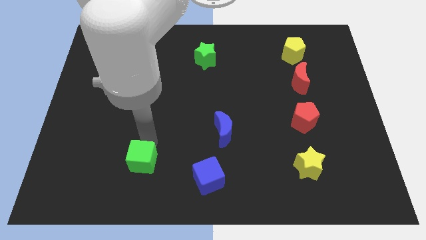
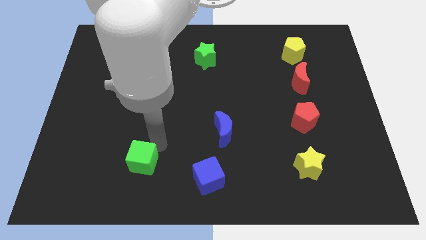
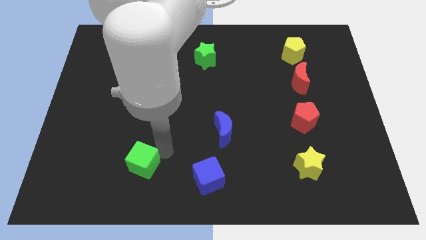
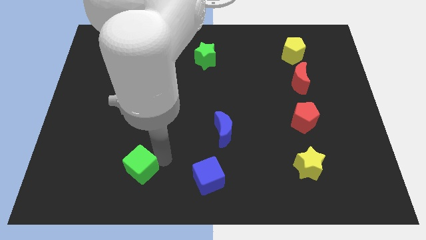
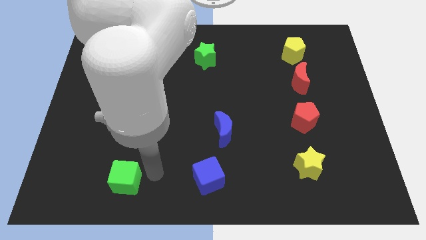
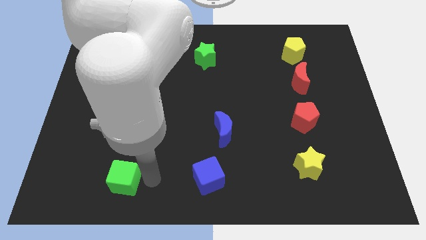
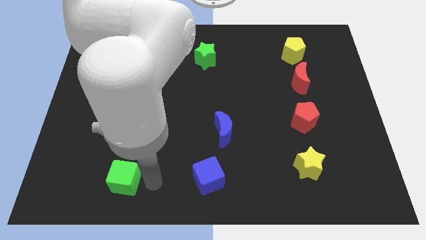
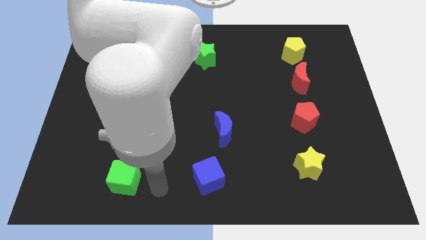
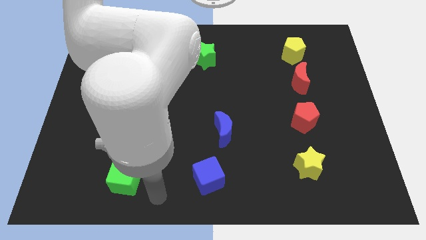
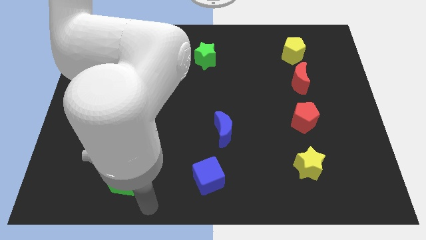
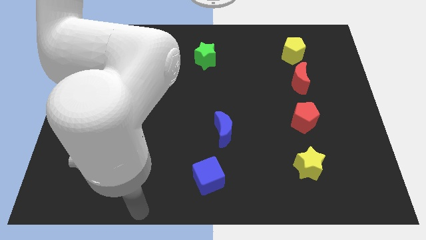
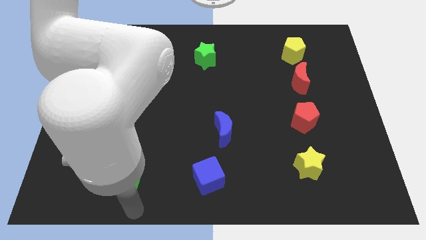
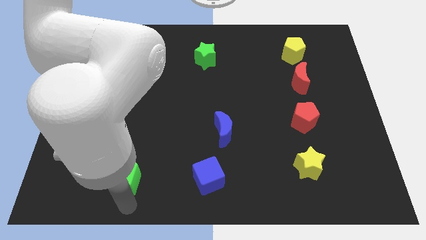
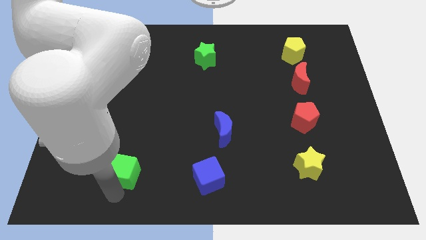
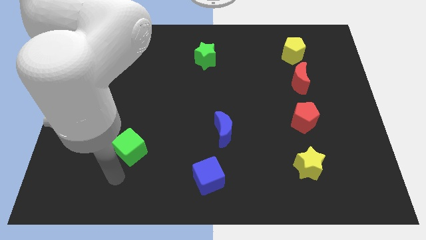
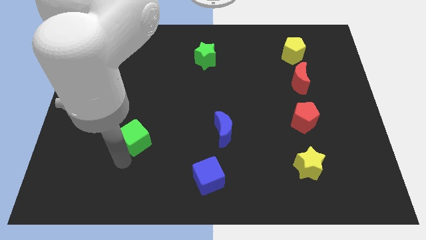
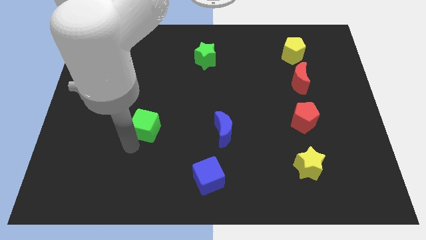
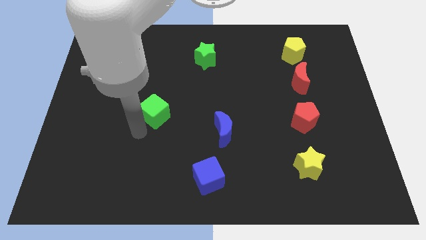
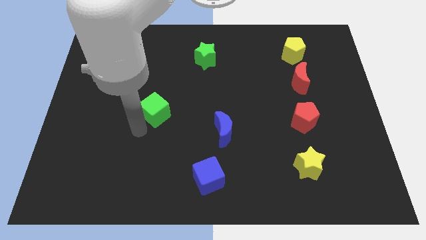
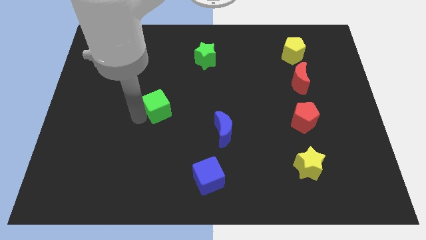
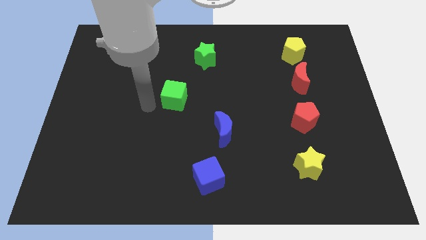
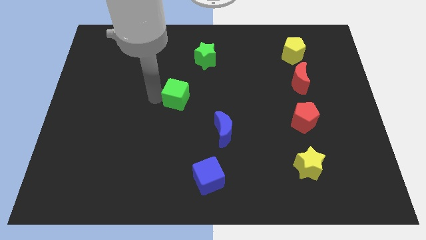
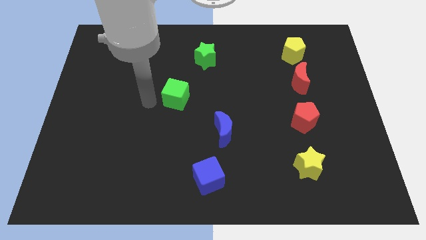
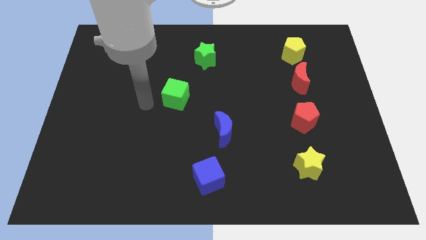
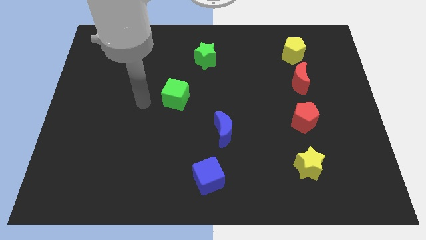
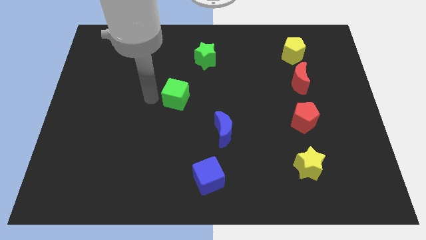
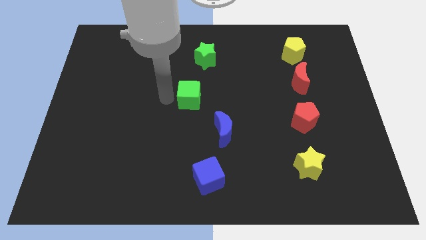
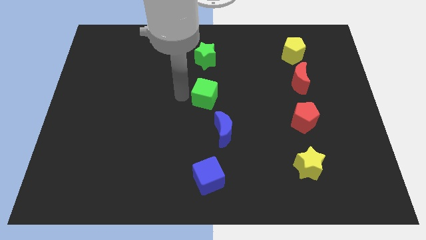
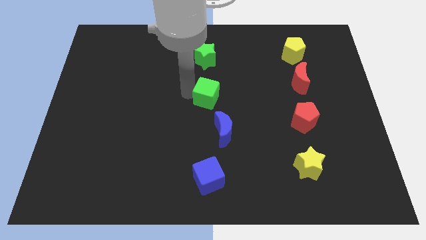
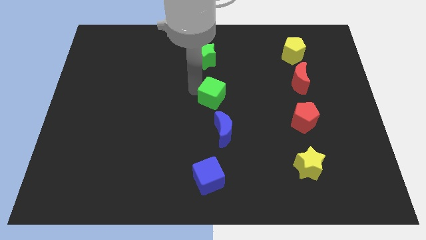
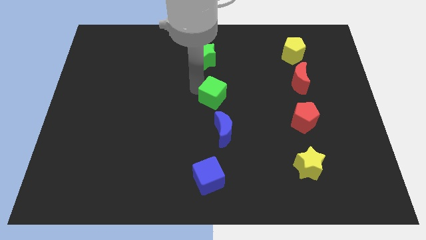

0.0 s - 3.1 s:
move the green cube towards the top of blue crescent

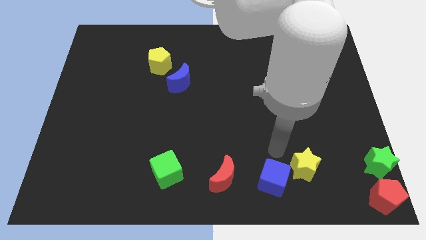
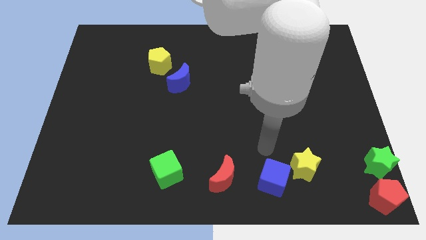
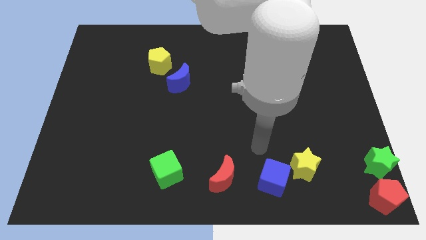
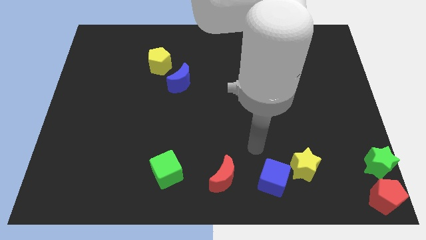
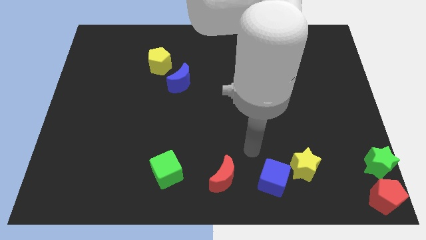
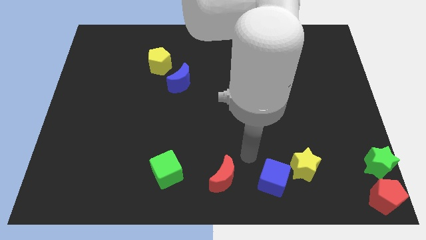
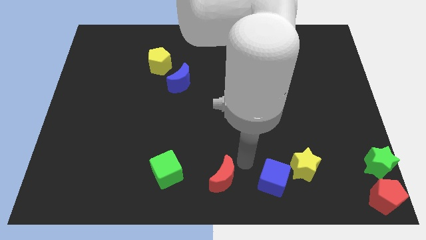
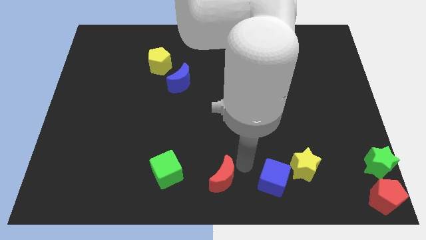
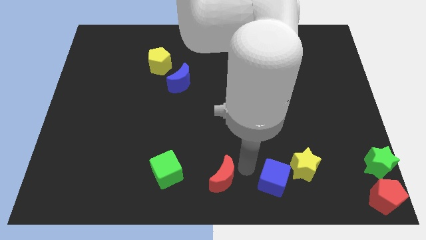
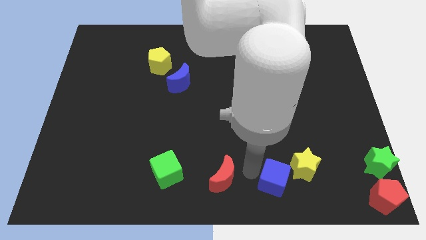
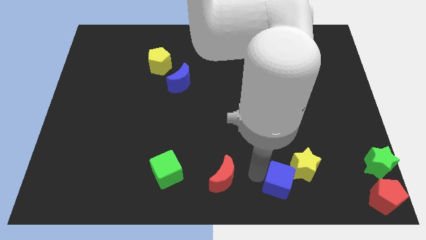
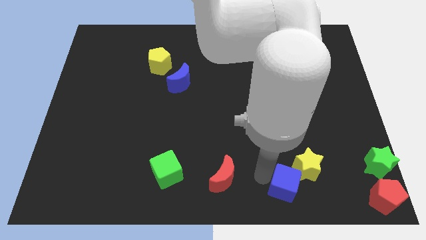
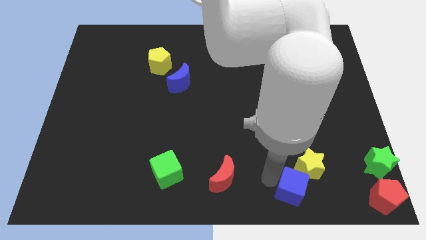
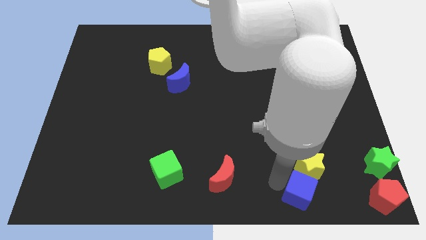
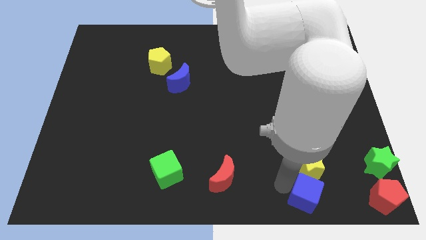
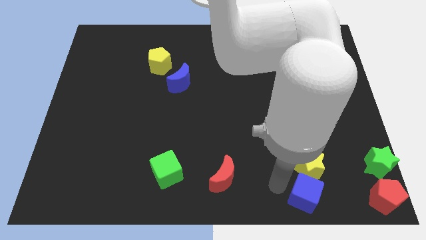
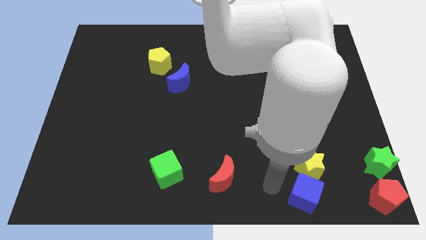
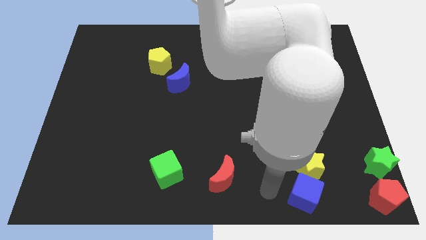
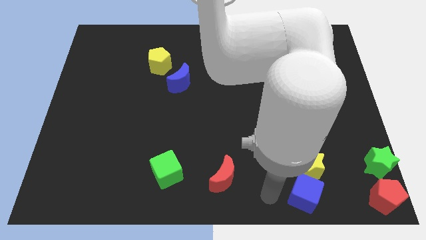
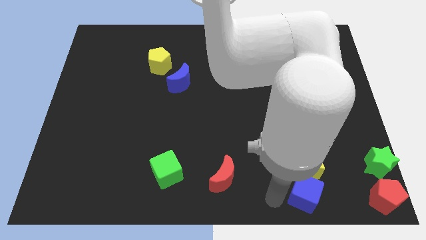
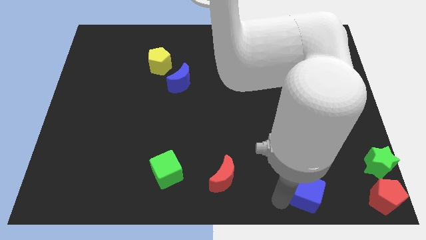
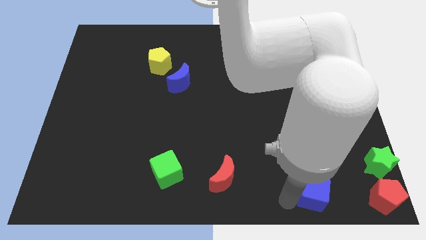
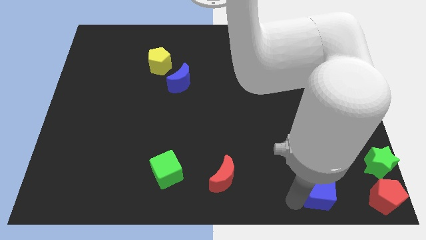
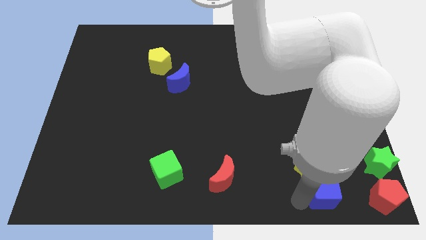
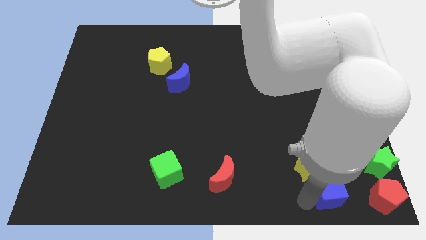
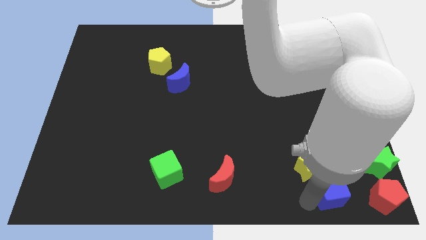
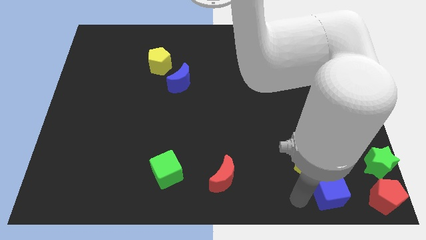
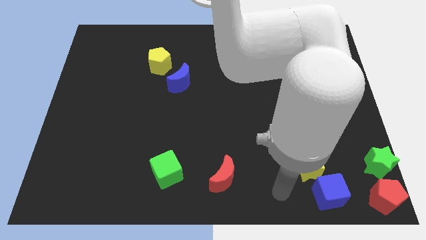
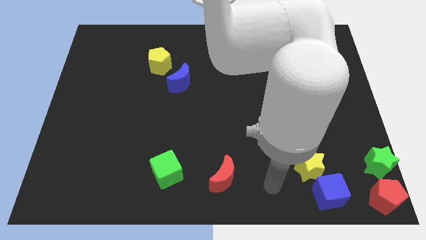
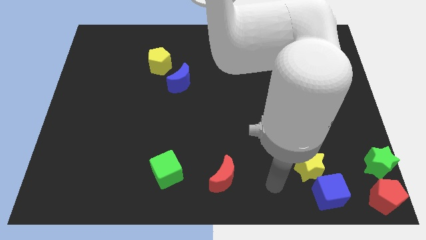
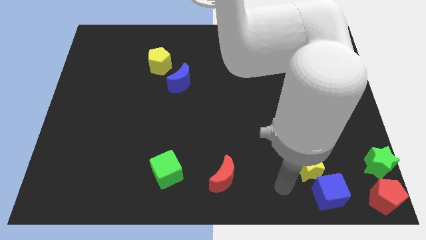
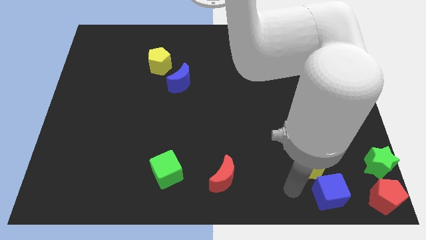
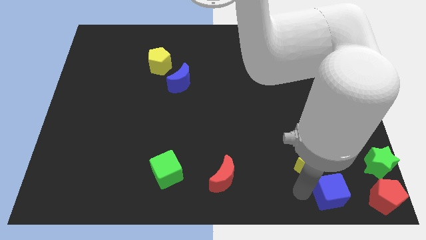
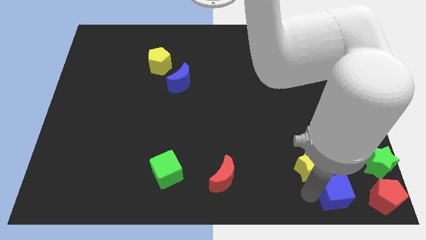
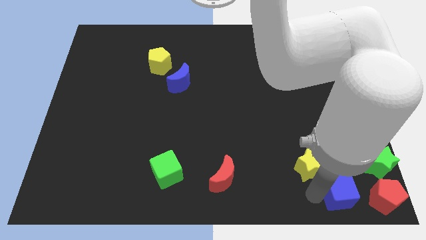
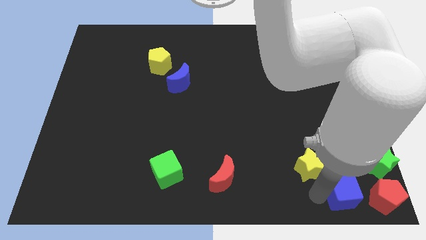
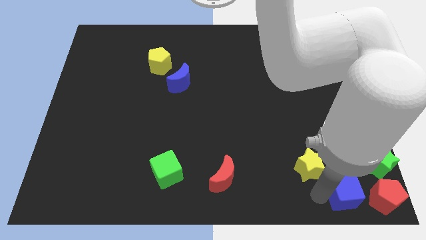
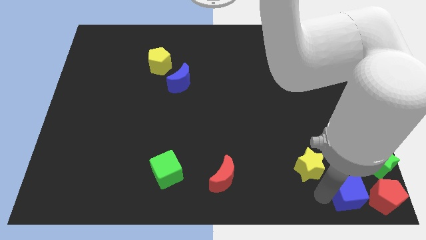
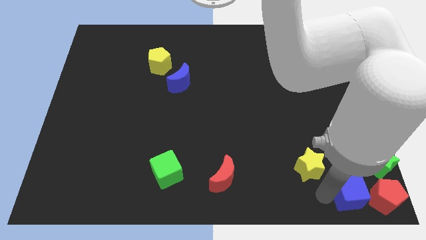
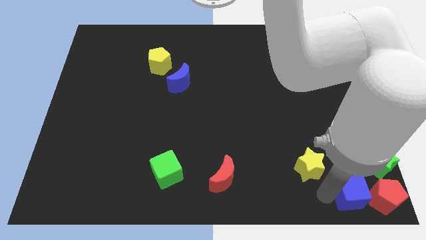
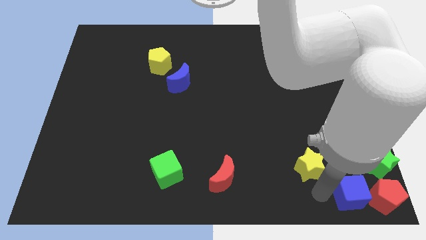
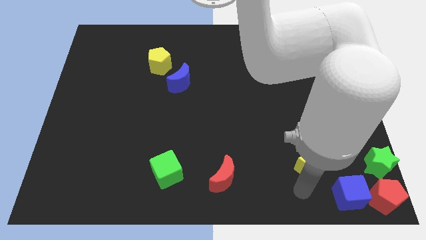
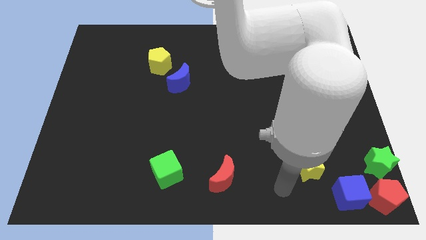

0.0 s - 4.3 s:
move the blue cube to the left of red pentagon

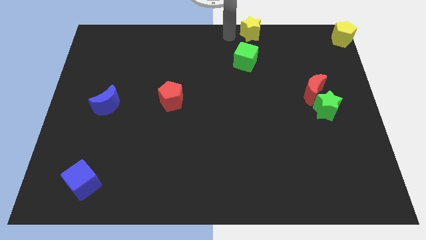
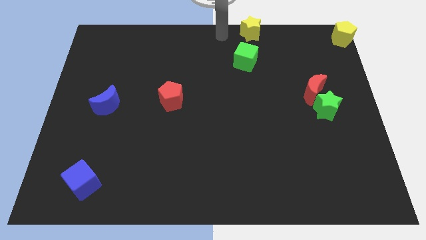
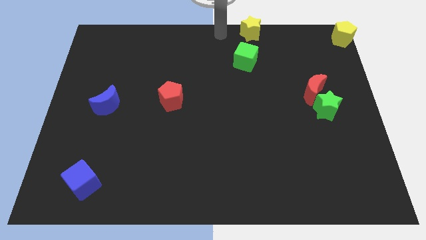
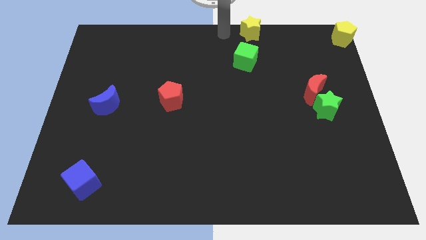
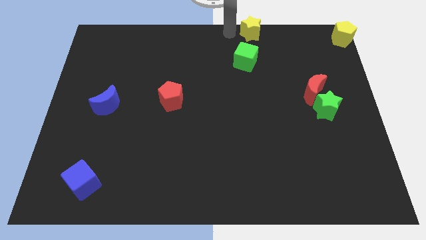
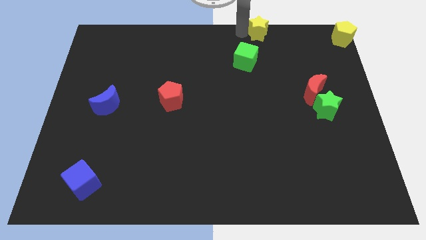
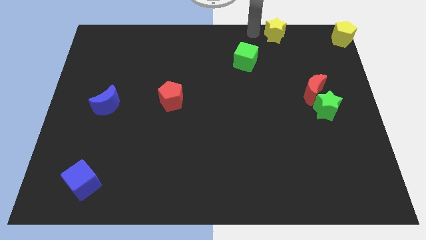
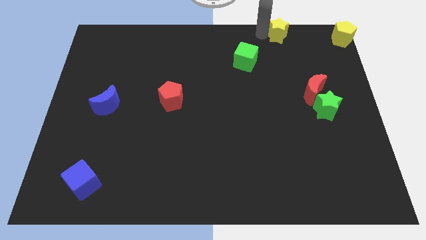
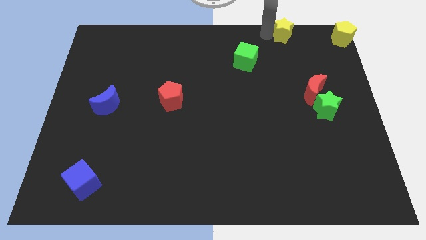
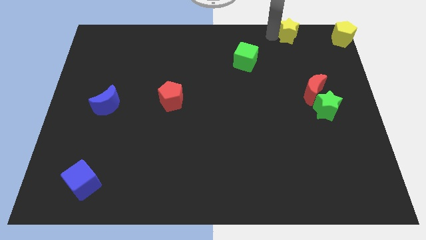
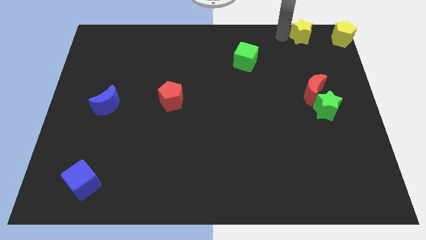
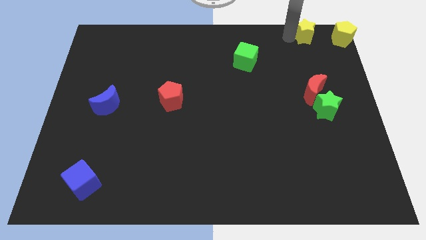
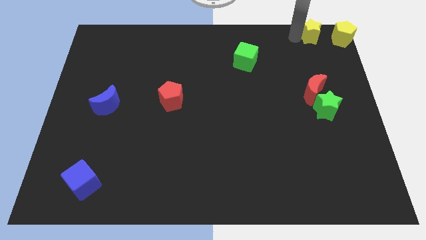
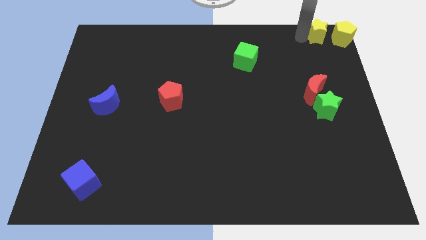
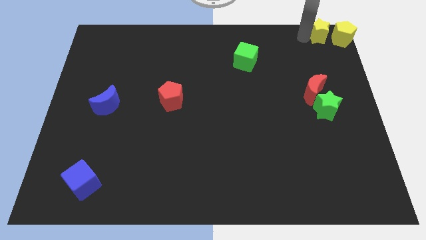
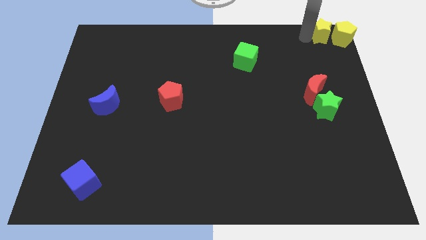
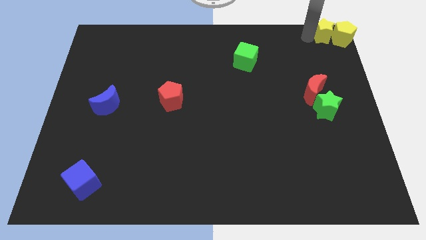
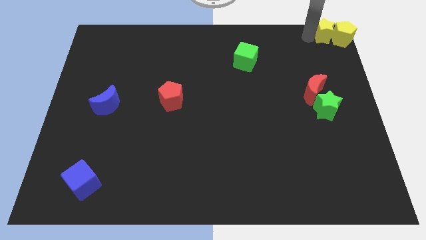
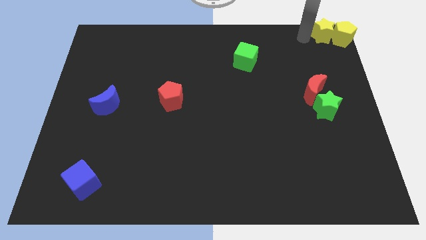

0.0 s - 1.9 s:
place the yellow star to the left side of the yellow pentagon
